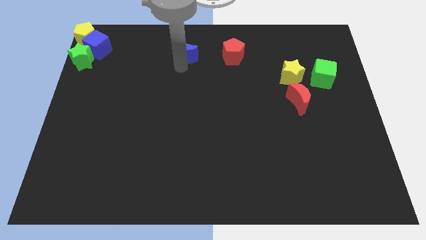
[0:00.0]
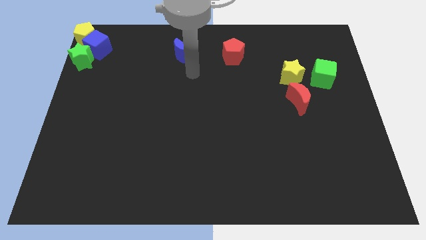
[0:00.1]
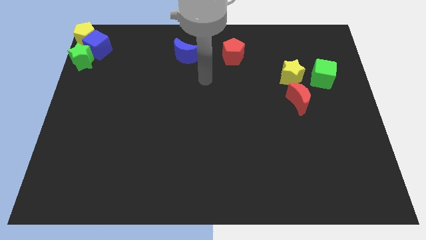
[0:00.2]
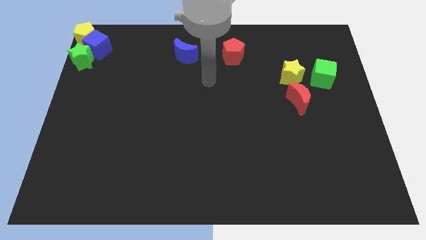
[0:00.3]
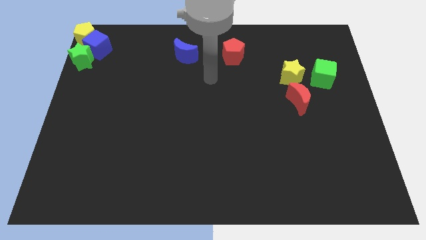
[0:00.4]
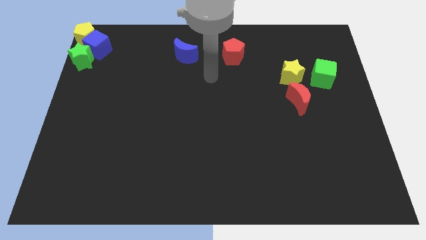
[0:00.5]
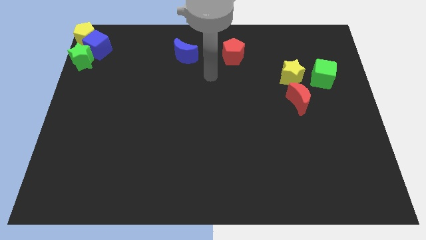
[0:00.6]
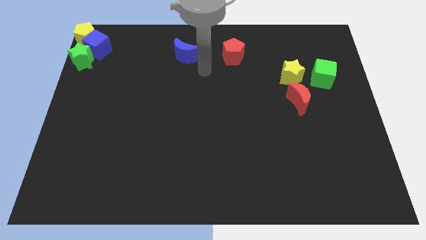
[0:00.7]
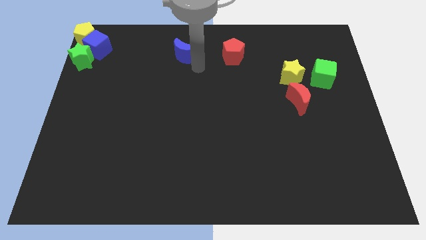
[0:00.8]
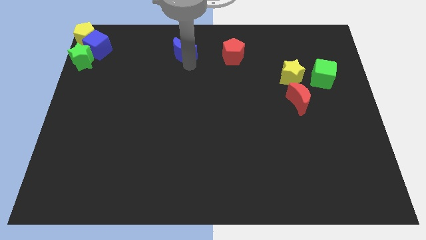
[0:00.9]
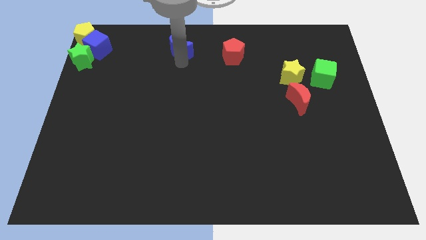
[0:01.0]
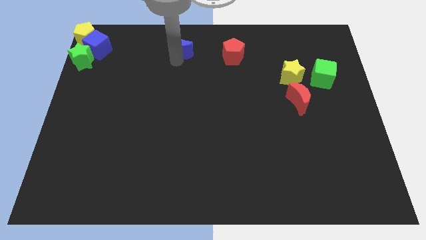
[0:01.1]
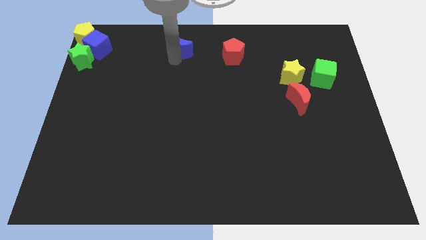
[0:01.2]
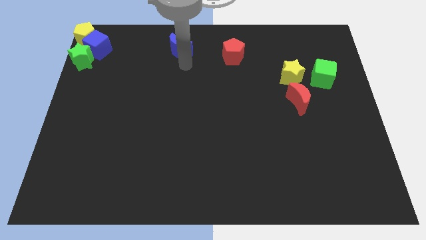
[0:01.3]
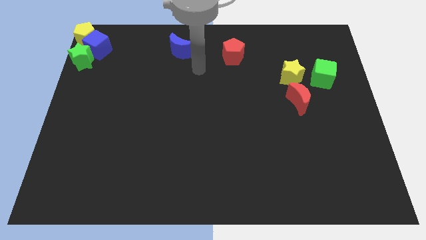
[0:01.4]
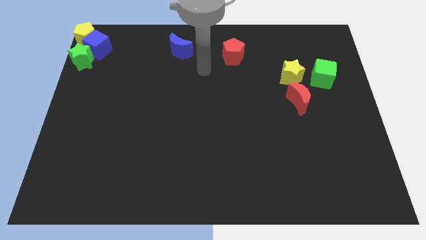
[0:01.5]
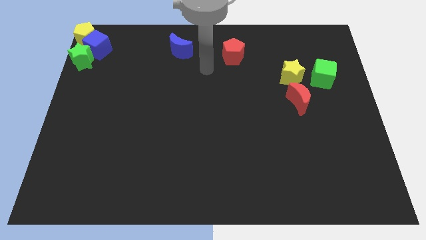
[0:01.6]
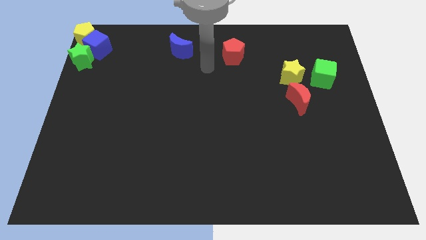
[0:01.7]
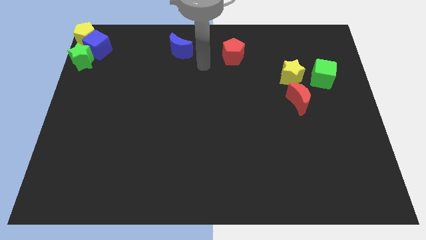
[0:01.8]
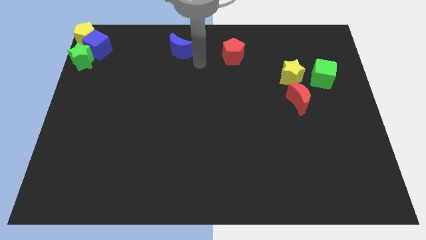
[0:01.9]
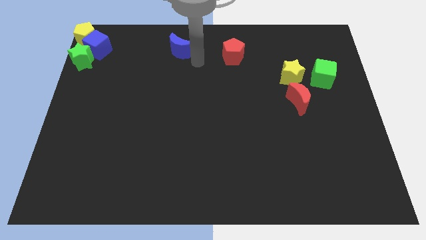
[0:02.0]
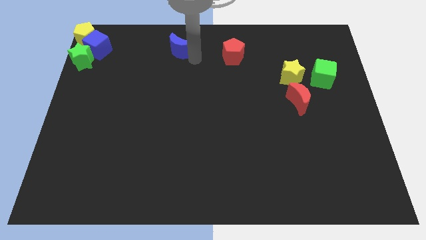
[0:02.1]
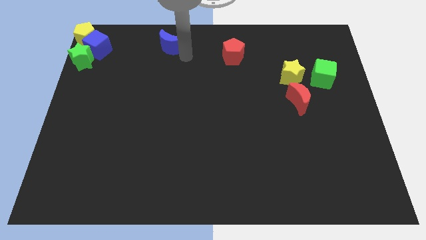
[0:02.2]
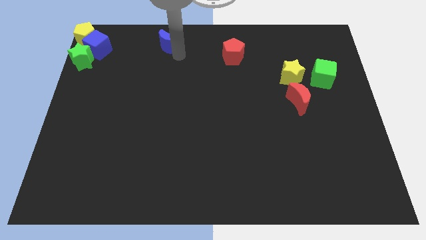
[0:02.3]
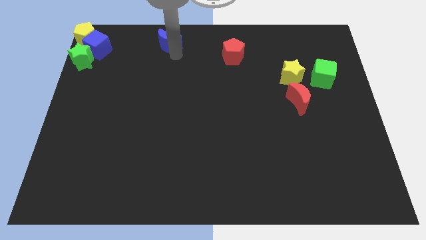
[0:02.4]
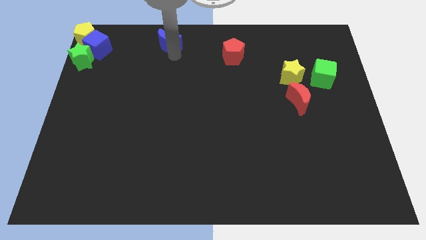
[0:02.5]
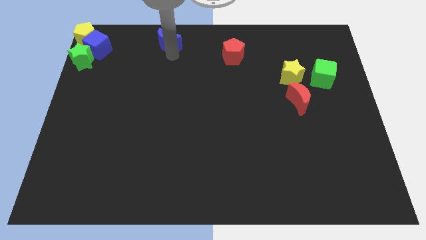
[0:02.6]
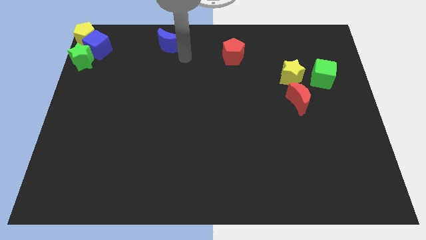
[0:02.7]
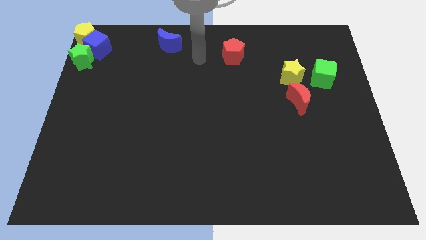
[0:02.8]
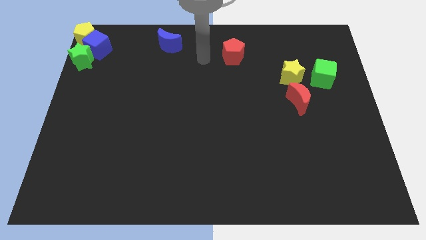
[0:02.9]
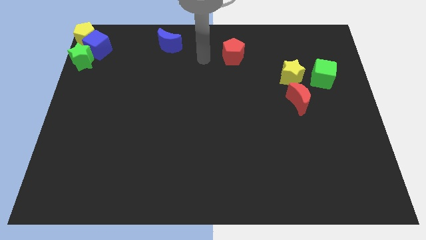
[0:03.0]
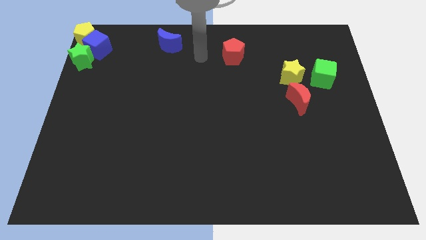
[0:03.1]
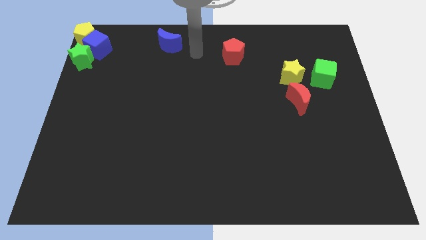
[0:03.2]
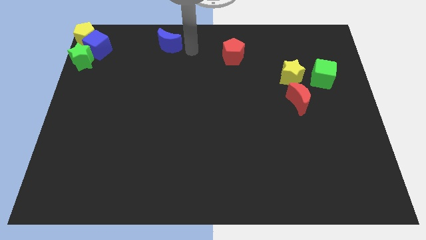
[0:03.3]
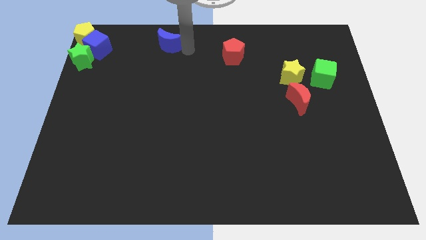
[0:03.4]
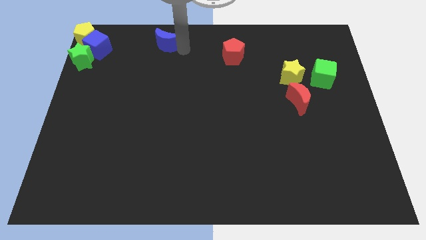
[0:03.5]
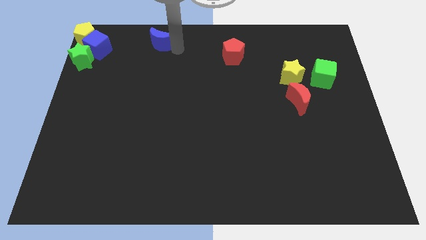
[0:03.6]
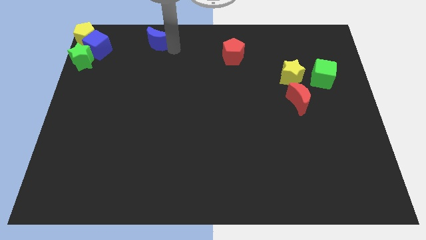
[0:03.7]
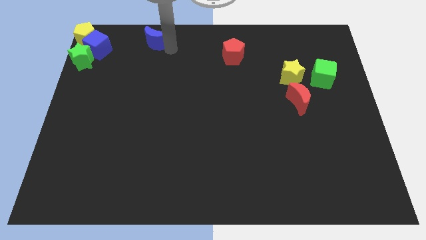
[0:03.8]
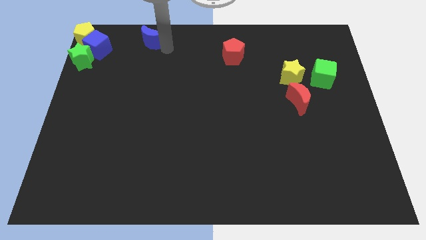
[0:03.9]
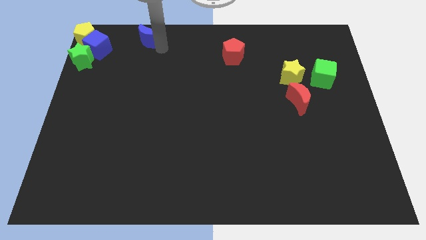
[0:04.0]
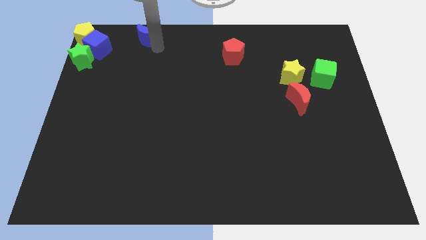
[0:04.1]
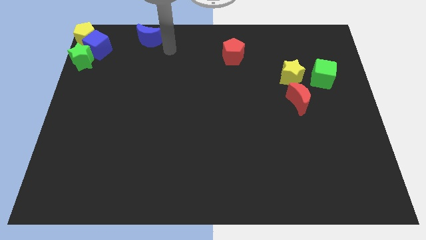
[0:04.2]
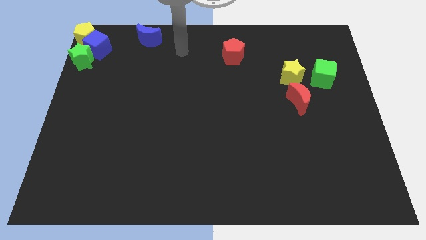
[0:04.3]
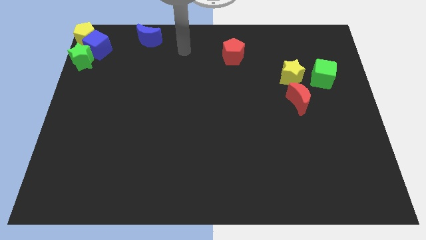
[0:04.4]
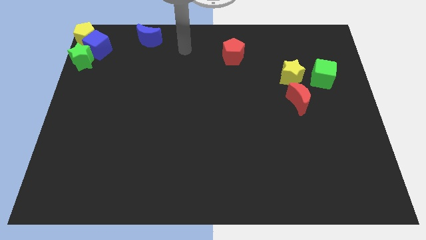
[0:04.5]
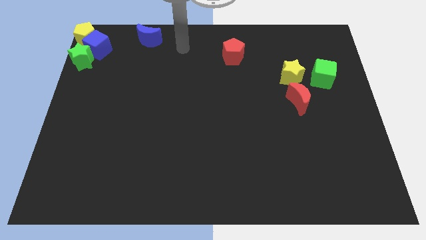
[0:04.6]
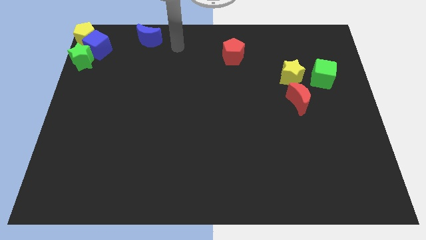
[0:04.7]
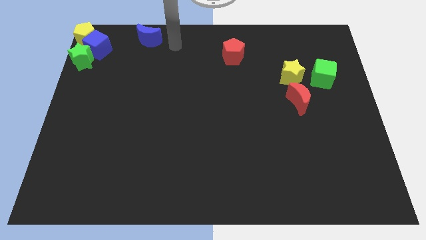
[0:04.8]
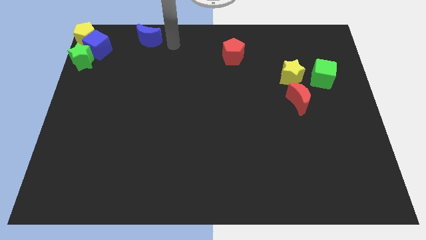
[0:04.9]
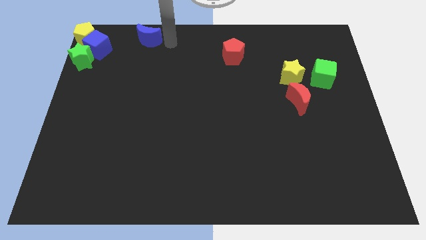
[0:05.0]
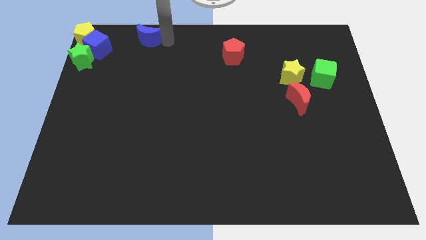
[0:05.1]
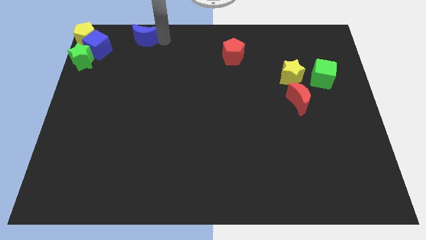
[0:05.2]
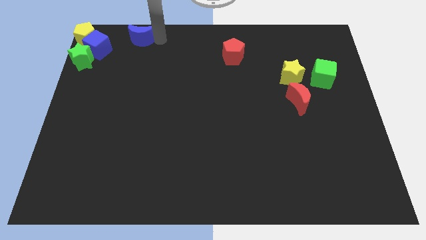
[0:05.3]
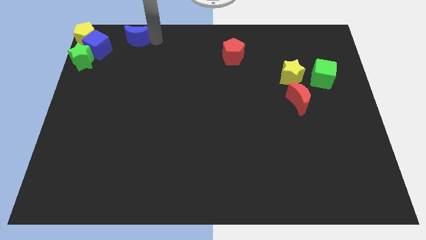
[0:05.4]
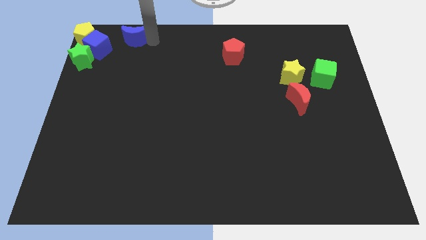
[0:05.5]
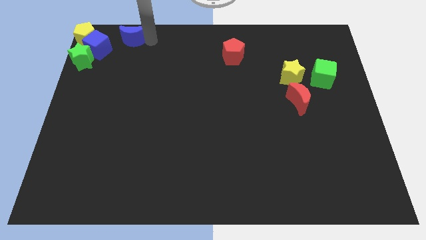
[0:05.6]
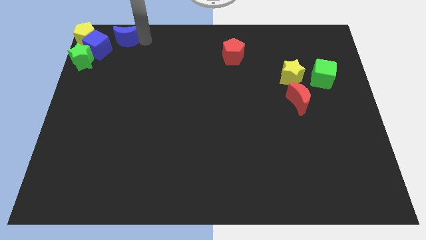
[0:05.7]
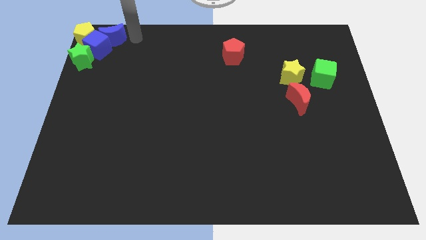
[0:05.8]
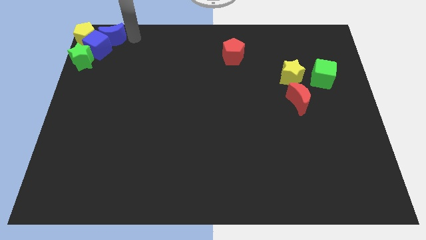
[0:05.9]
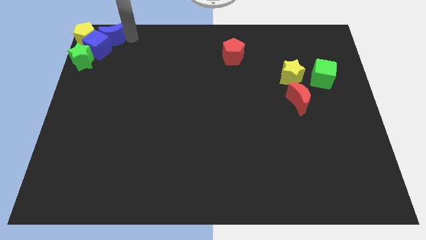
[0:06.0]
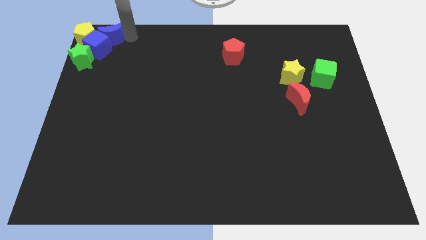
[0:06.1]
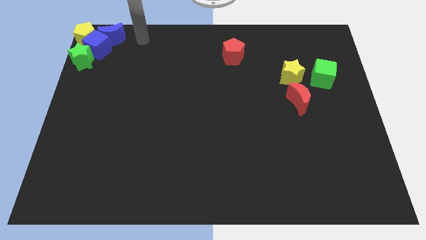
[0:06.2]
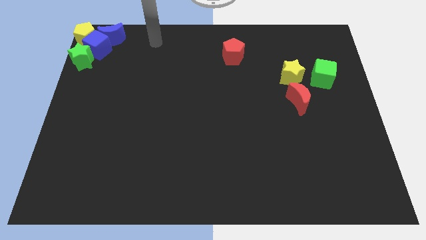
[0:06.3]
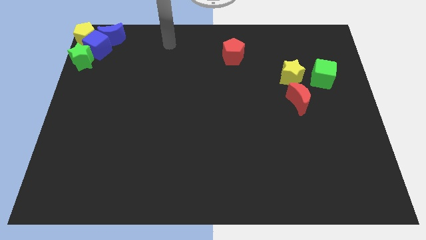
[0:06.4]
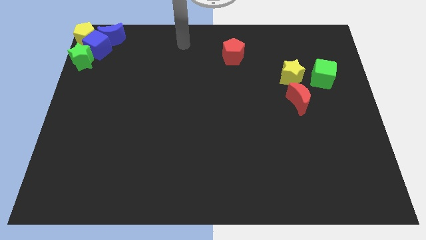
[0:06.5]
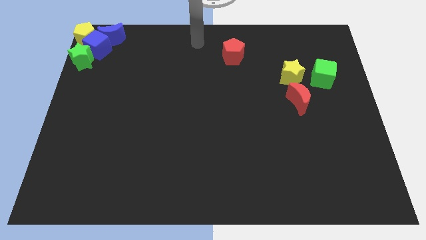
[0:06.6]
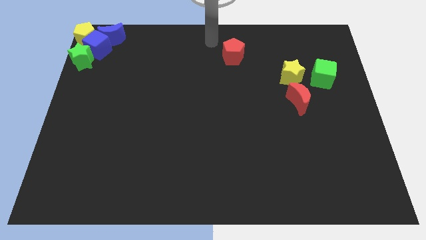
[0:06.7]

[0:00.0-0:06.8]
place the blue moon right to the yellow pentagon

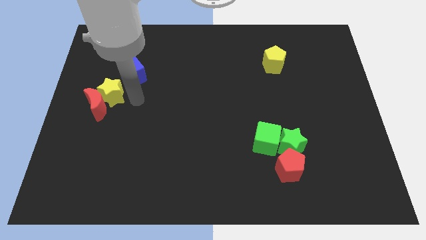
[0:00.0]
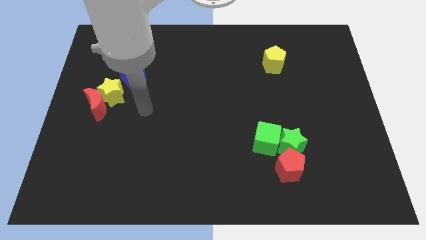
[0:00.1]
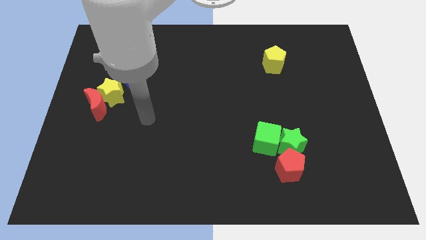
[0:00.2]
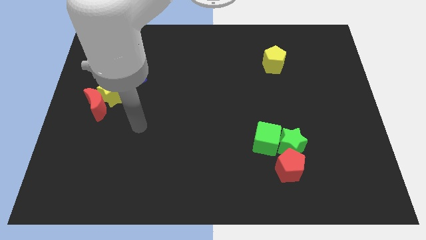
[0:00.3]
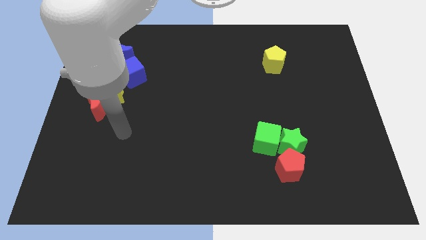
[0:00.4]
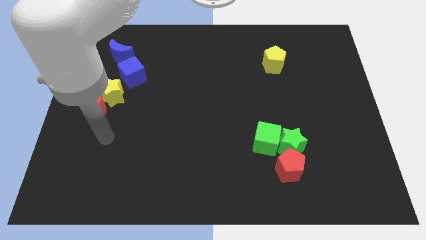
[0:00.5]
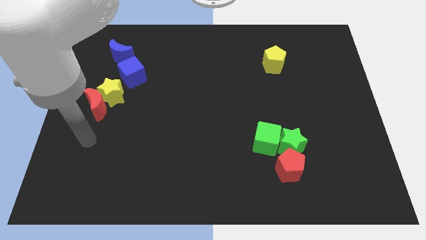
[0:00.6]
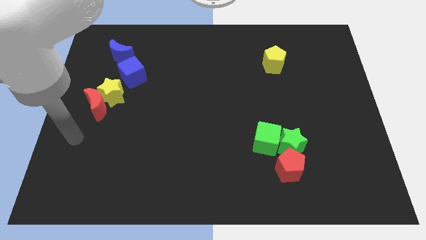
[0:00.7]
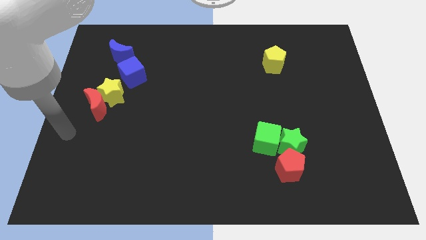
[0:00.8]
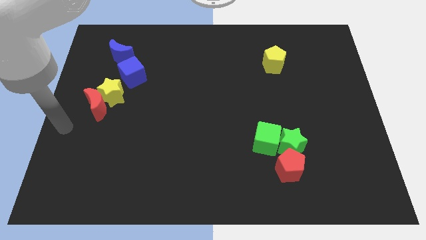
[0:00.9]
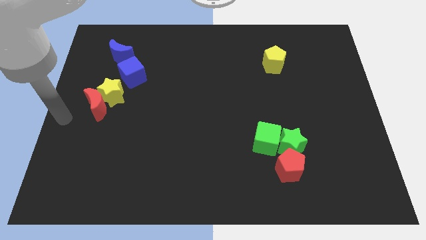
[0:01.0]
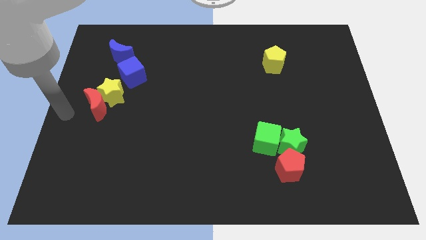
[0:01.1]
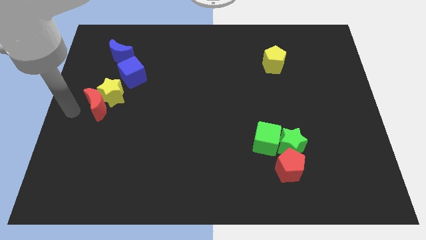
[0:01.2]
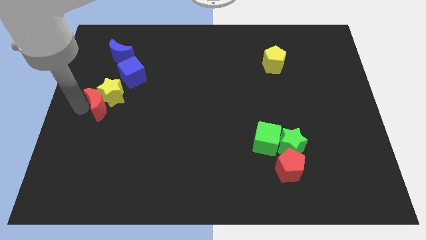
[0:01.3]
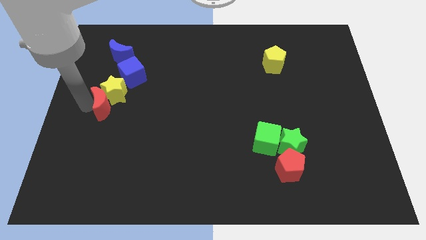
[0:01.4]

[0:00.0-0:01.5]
place your arm at the left of the red moon

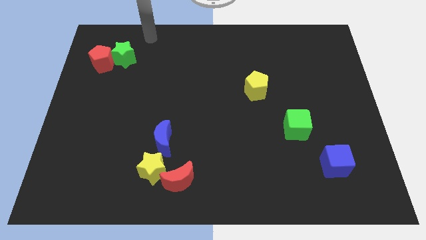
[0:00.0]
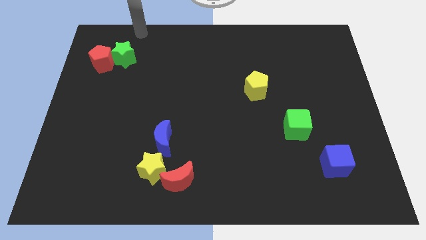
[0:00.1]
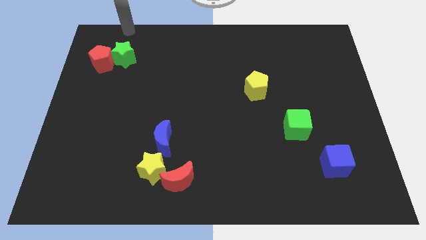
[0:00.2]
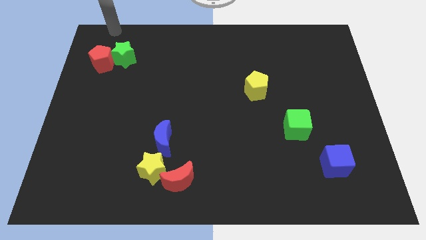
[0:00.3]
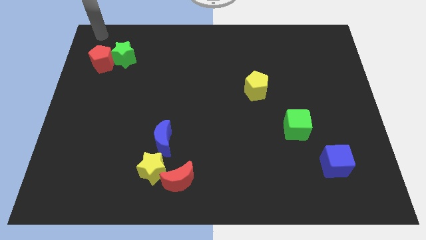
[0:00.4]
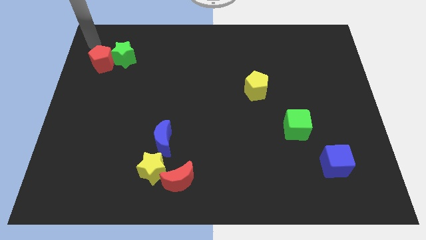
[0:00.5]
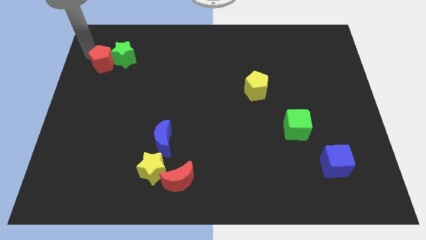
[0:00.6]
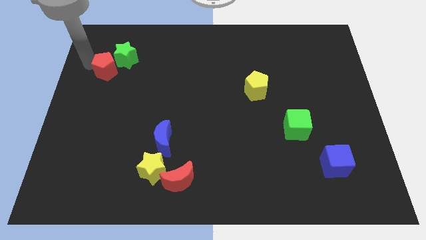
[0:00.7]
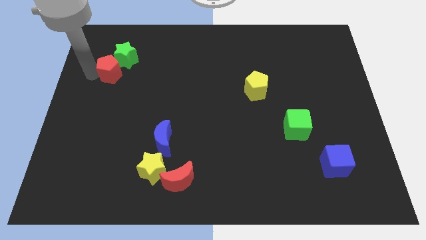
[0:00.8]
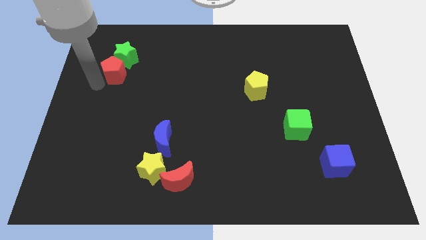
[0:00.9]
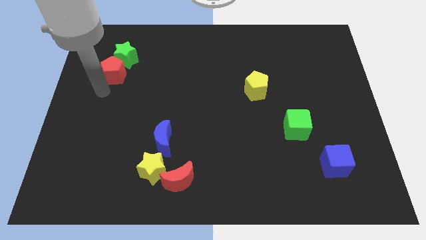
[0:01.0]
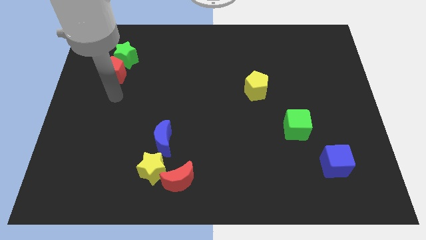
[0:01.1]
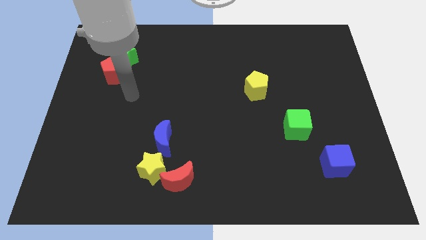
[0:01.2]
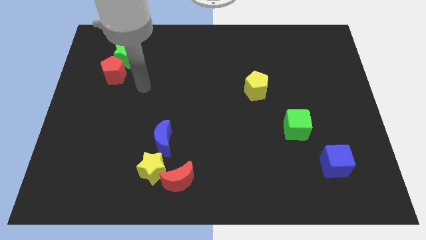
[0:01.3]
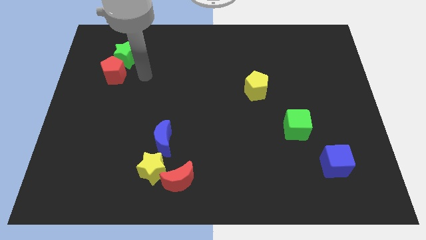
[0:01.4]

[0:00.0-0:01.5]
place red pentagon to the bottom of green star
